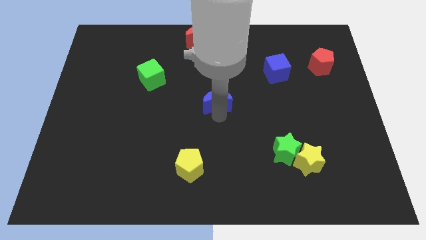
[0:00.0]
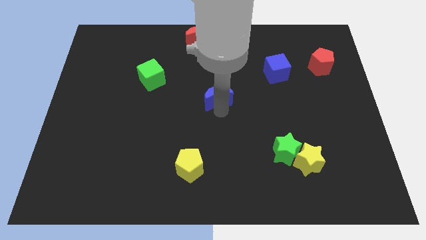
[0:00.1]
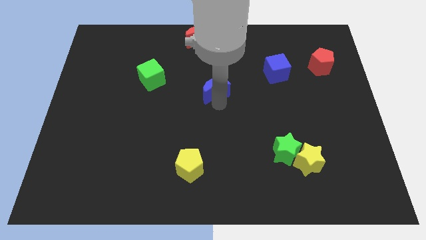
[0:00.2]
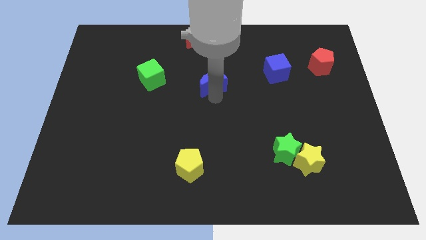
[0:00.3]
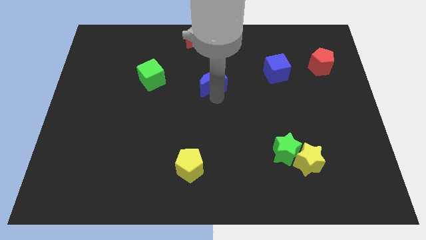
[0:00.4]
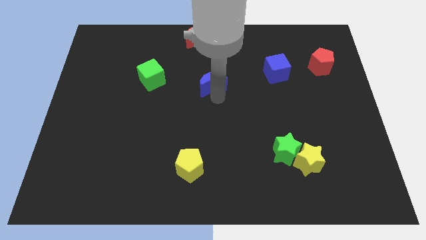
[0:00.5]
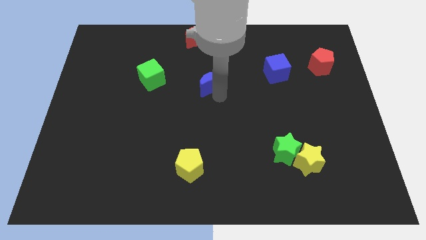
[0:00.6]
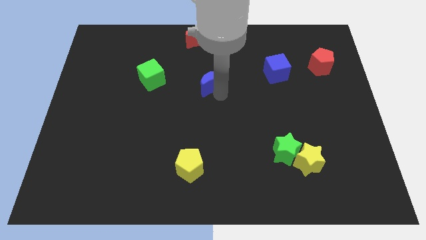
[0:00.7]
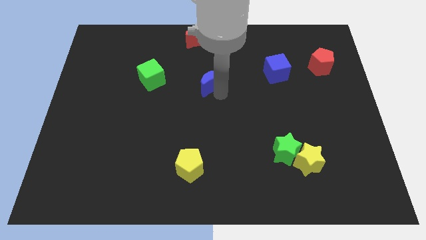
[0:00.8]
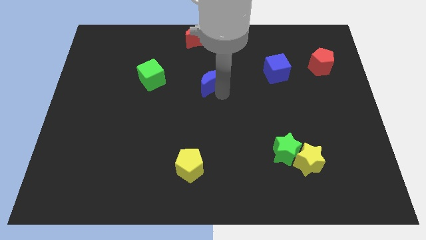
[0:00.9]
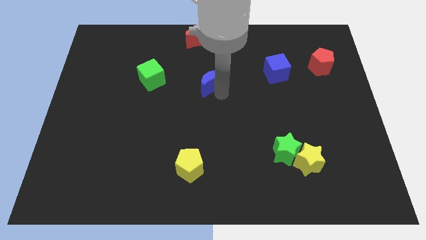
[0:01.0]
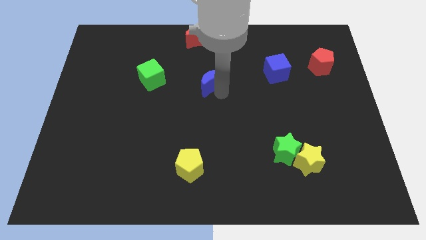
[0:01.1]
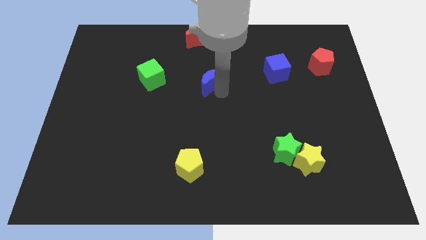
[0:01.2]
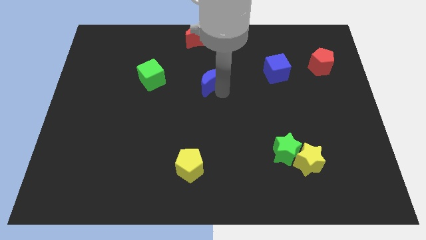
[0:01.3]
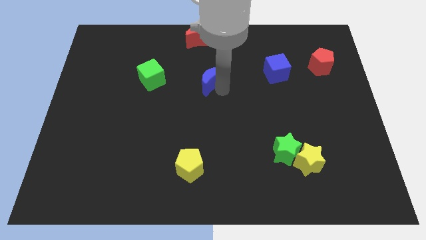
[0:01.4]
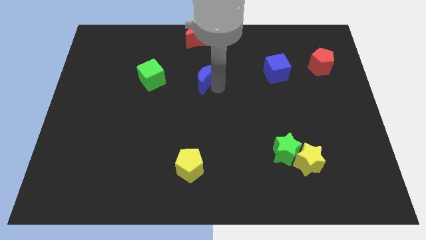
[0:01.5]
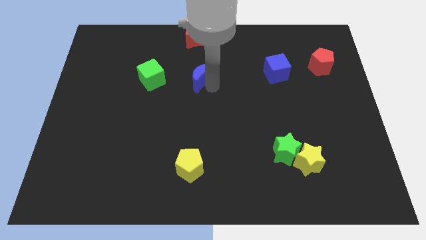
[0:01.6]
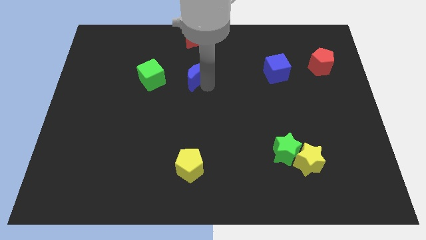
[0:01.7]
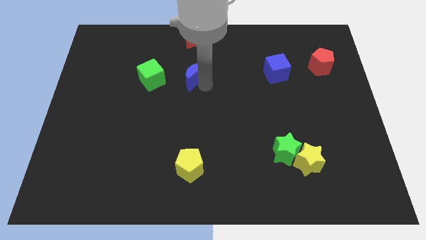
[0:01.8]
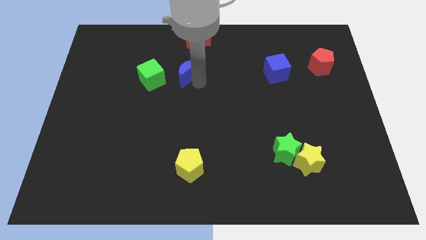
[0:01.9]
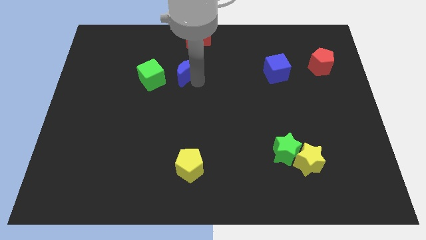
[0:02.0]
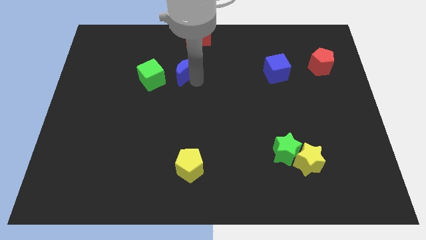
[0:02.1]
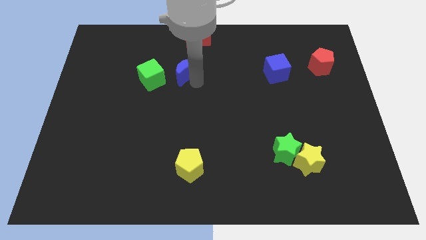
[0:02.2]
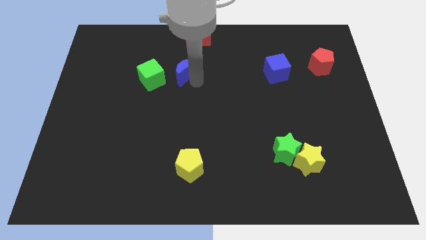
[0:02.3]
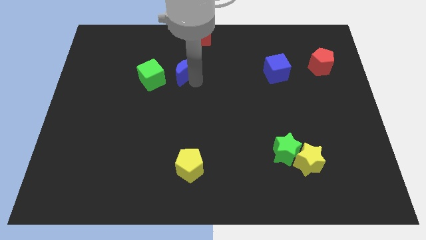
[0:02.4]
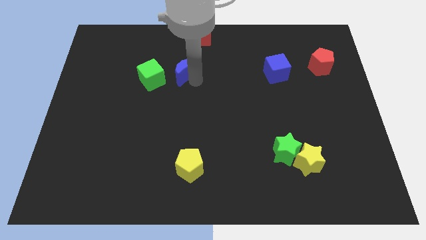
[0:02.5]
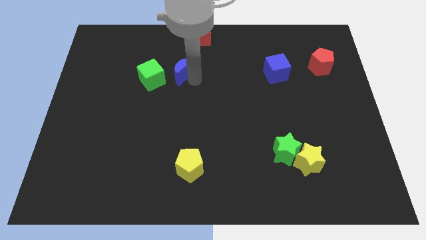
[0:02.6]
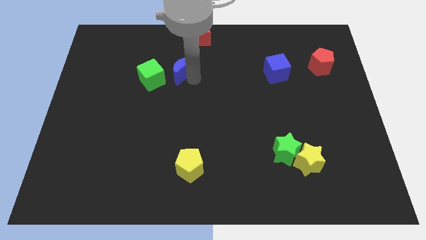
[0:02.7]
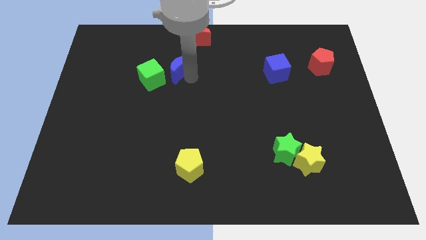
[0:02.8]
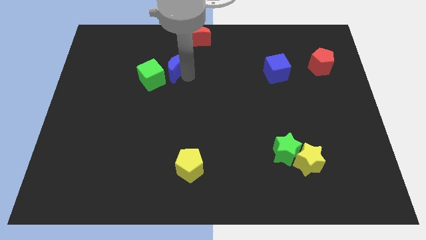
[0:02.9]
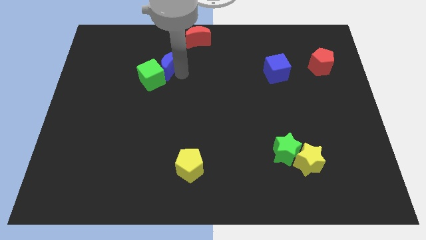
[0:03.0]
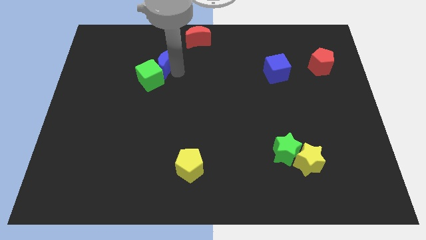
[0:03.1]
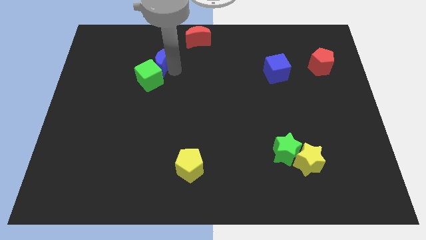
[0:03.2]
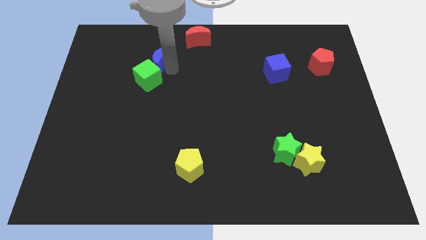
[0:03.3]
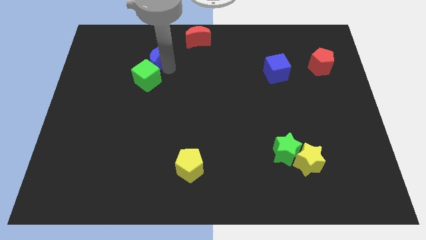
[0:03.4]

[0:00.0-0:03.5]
place blue moon above green cube

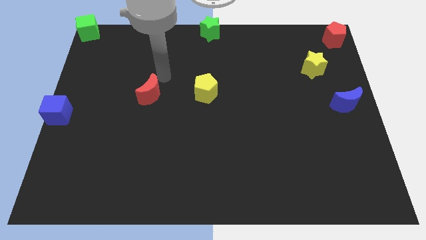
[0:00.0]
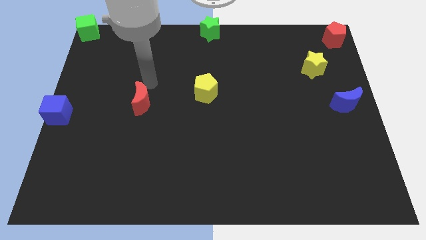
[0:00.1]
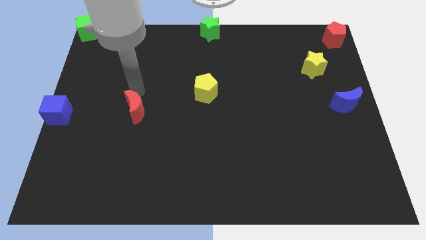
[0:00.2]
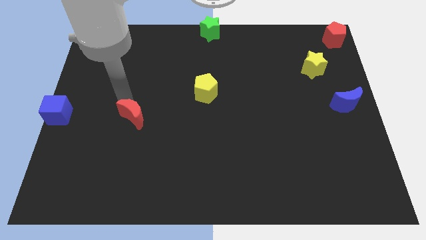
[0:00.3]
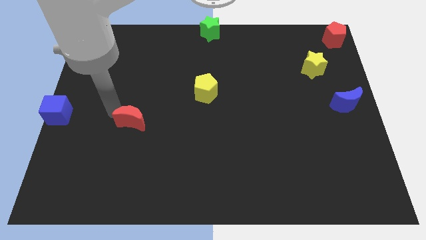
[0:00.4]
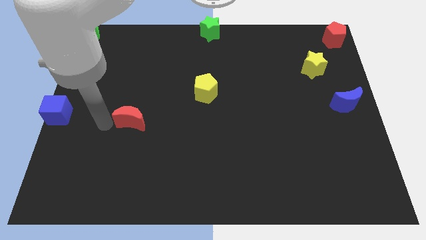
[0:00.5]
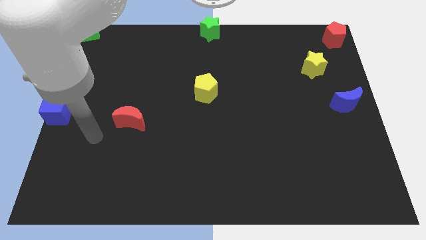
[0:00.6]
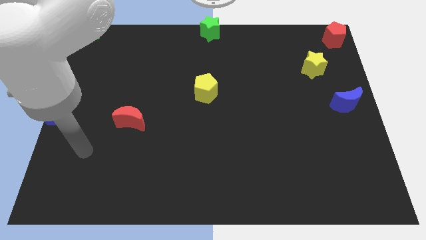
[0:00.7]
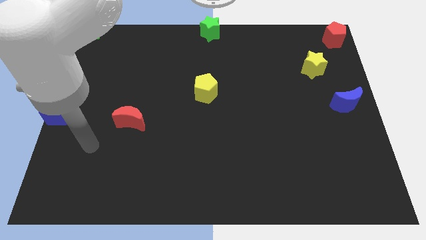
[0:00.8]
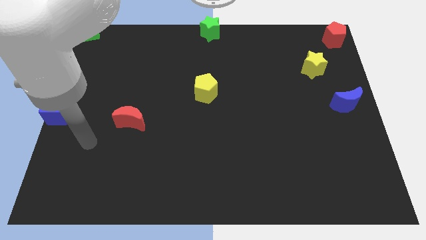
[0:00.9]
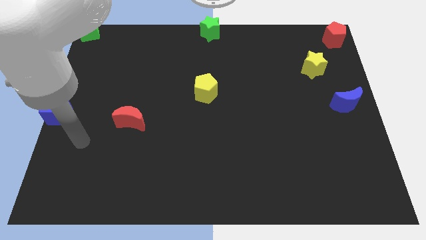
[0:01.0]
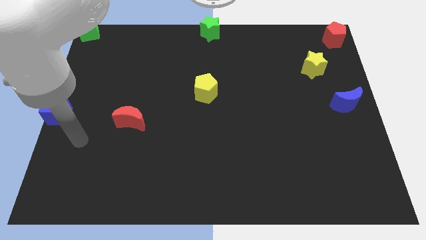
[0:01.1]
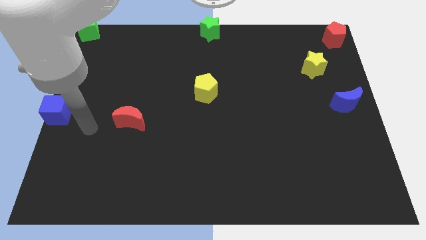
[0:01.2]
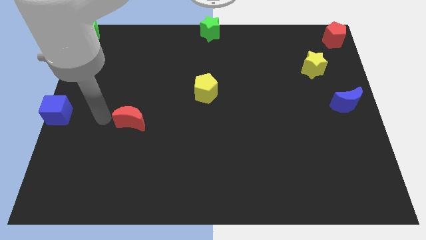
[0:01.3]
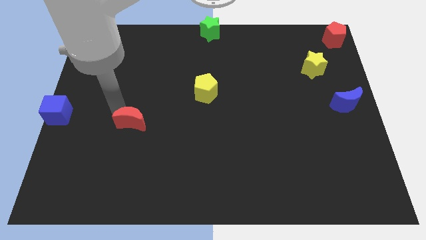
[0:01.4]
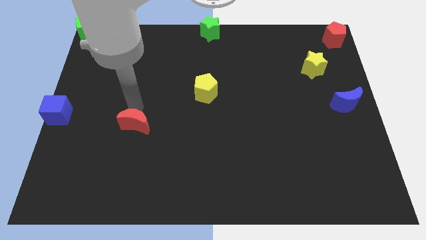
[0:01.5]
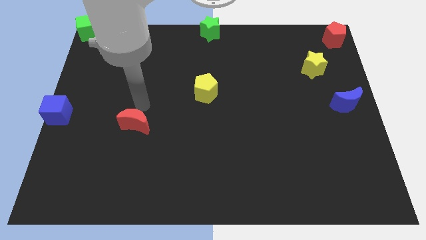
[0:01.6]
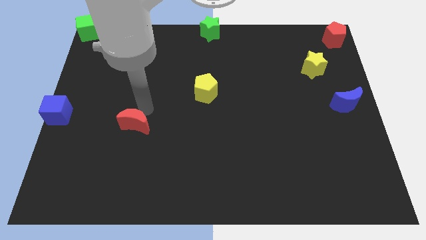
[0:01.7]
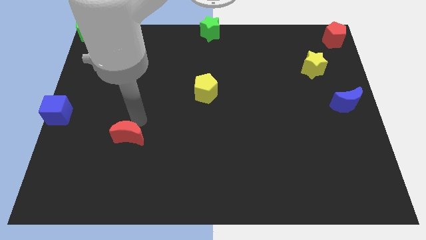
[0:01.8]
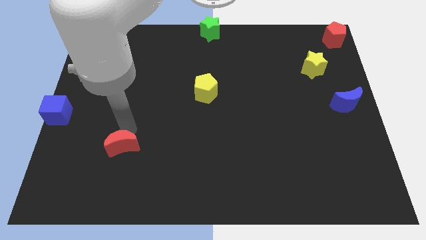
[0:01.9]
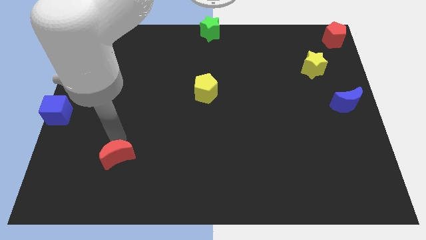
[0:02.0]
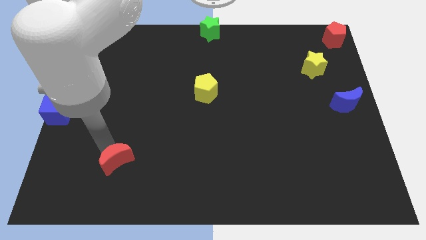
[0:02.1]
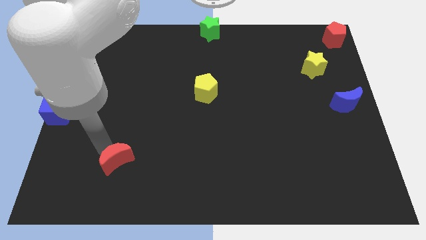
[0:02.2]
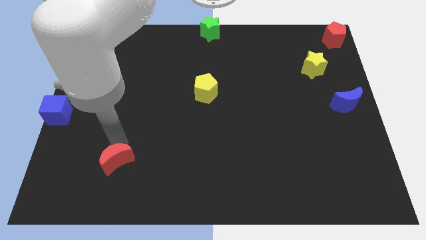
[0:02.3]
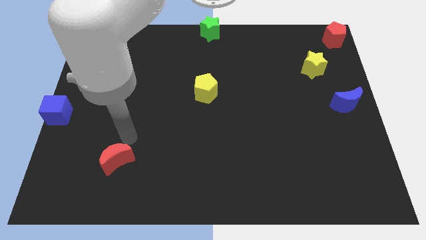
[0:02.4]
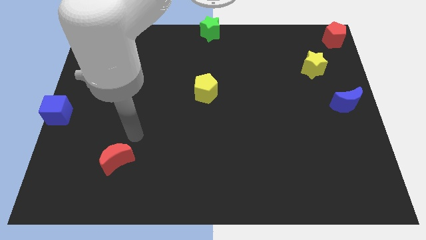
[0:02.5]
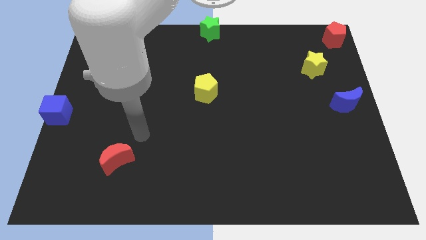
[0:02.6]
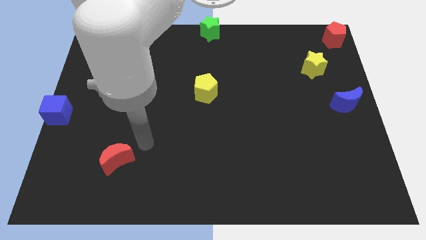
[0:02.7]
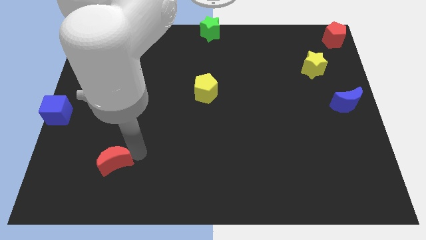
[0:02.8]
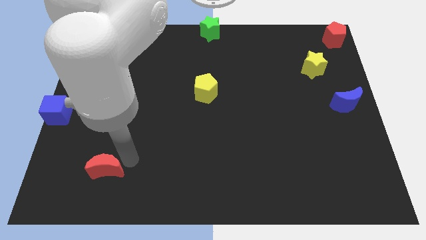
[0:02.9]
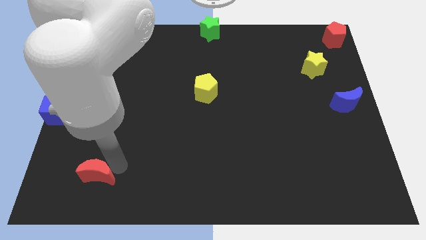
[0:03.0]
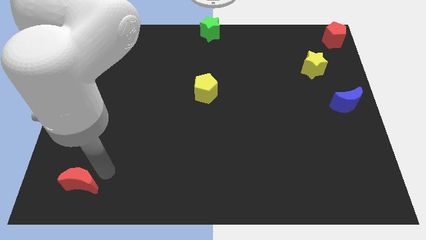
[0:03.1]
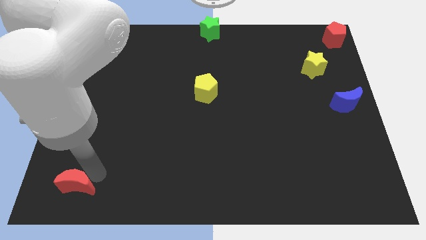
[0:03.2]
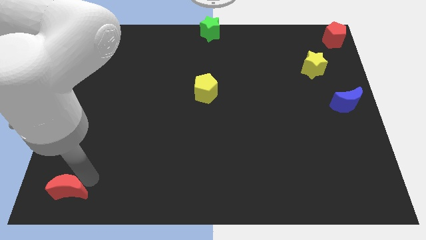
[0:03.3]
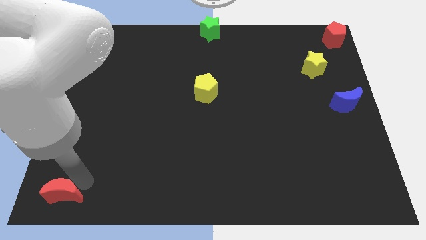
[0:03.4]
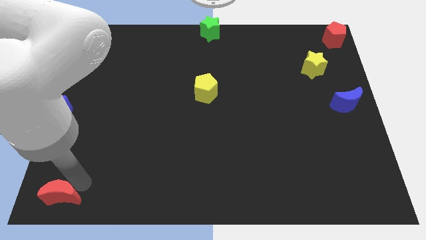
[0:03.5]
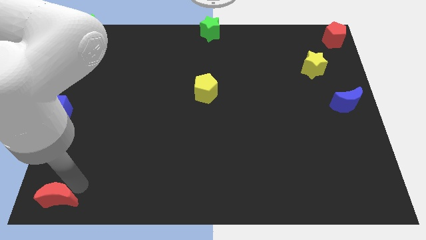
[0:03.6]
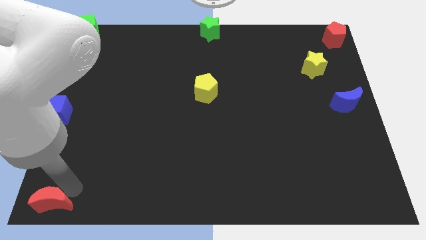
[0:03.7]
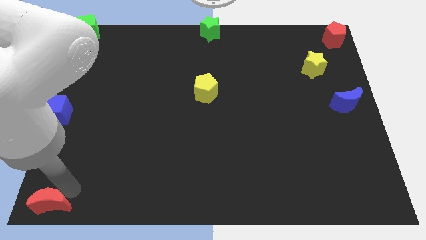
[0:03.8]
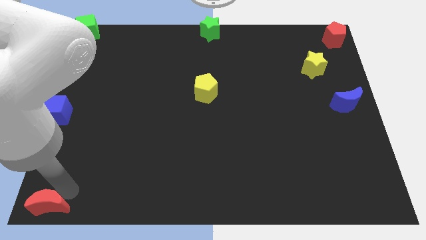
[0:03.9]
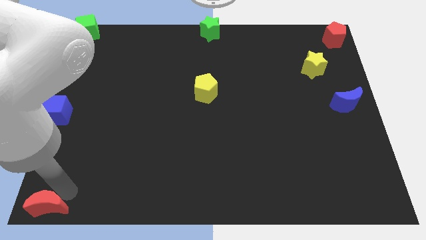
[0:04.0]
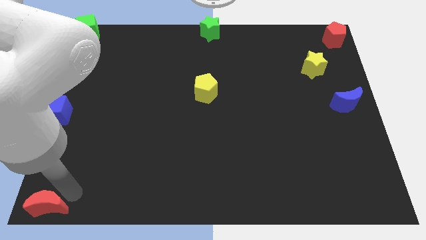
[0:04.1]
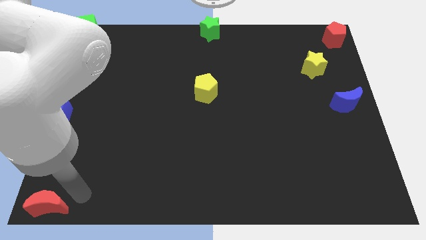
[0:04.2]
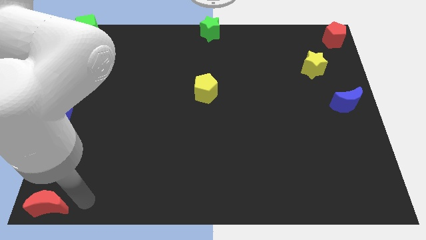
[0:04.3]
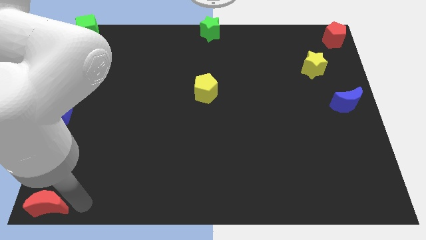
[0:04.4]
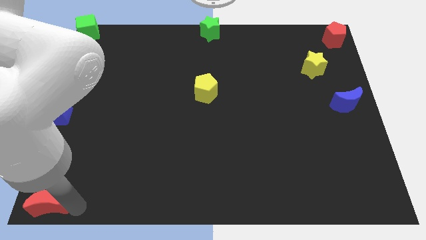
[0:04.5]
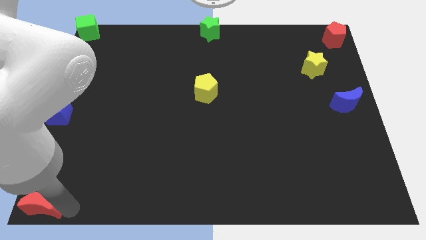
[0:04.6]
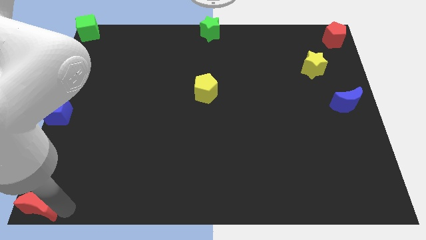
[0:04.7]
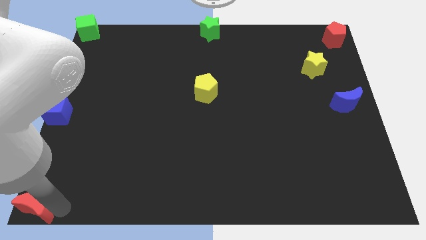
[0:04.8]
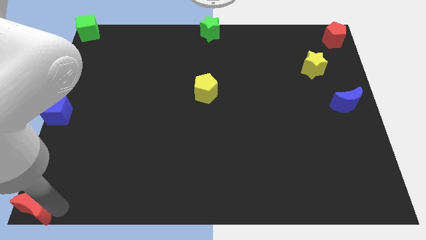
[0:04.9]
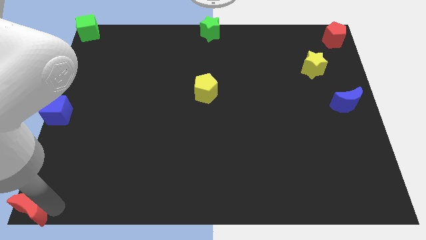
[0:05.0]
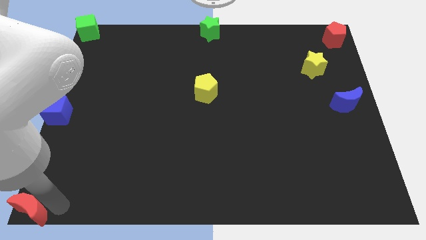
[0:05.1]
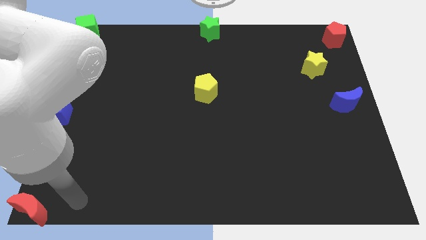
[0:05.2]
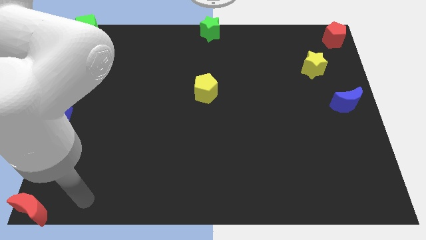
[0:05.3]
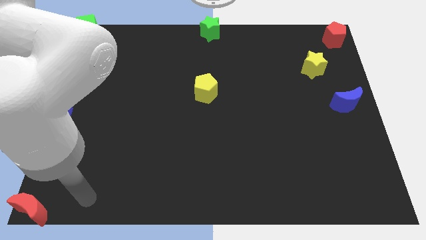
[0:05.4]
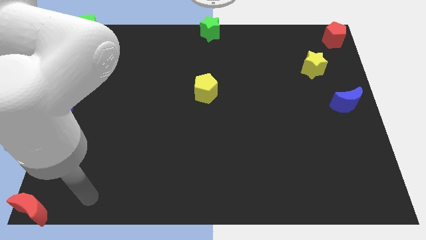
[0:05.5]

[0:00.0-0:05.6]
move the red moon to the bottom left corner of the board
